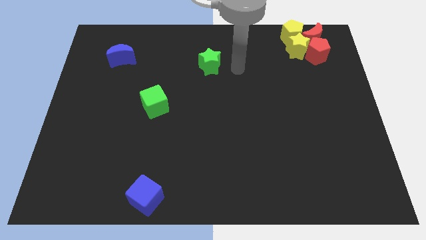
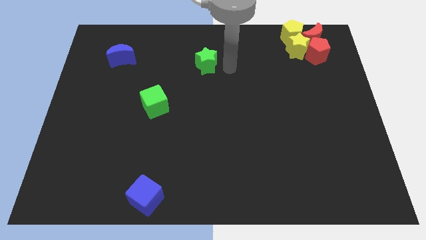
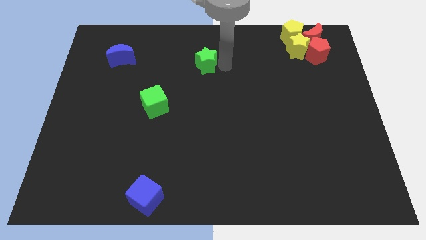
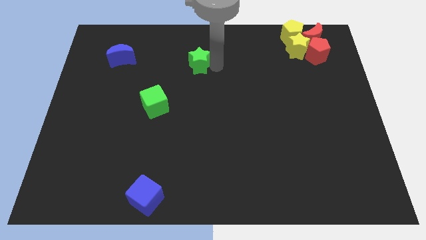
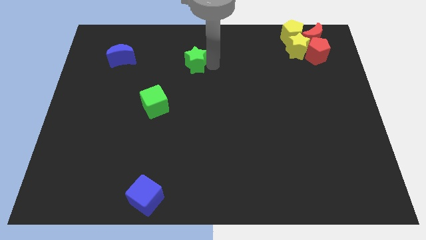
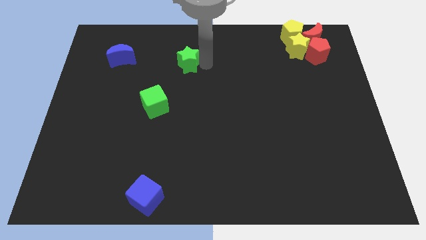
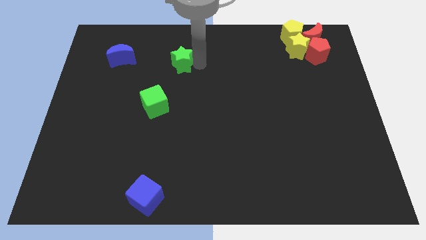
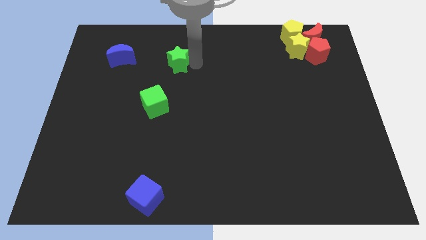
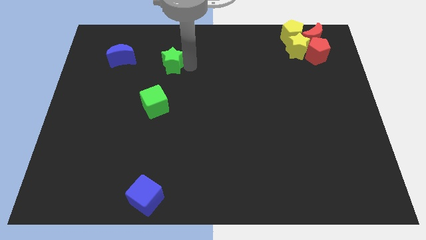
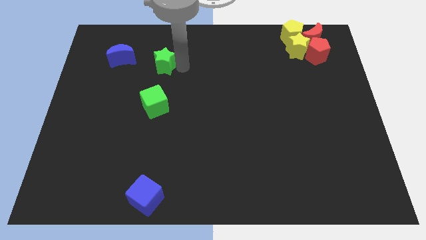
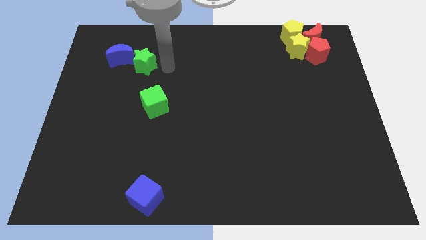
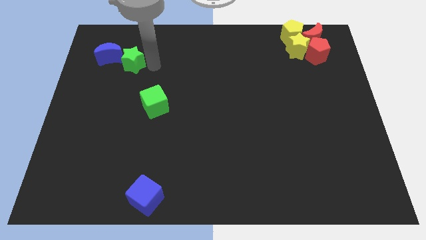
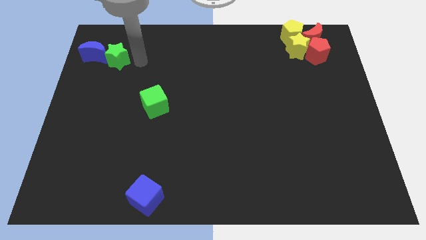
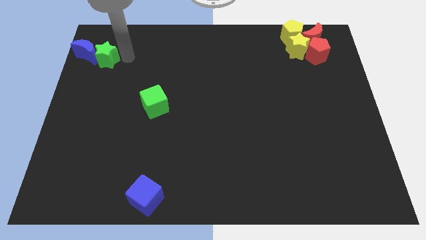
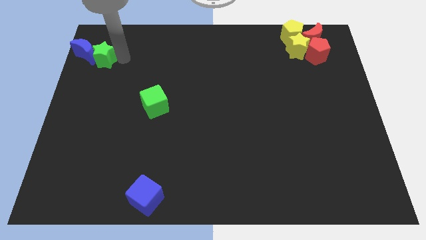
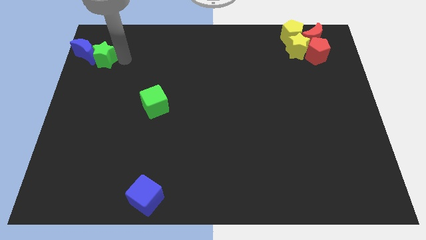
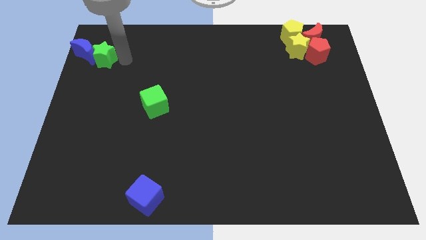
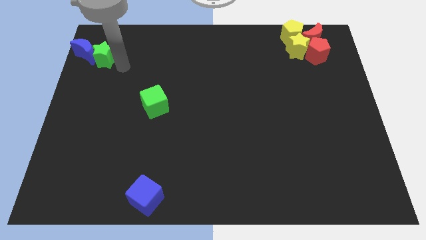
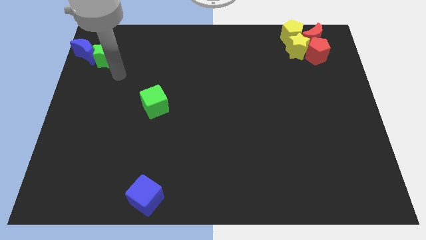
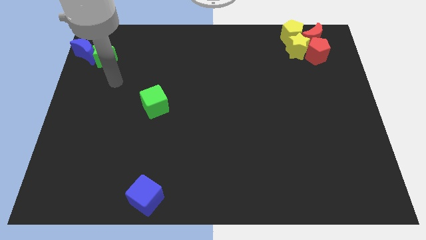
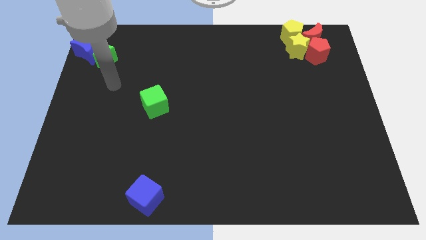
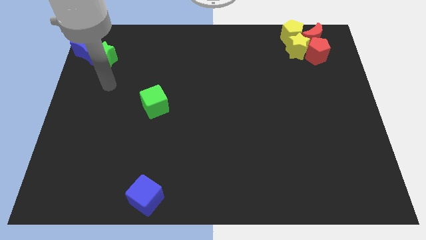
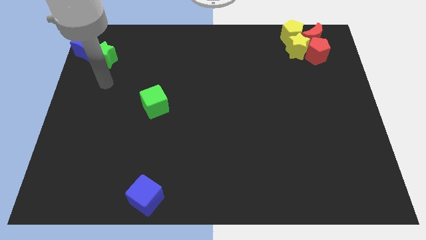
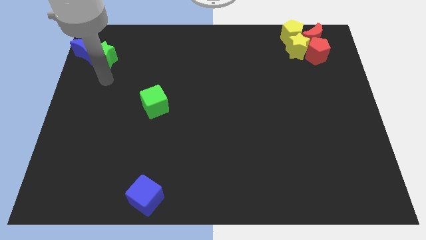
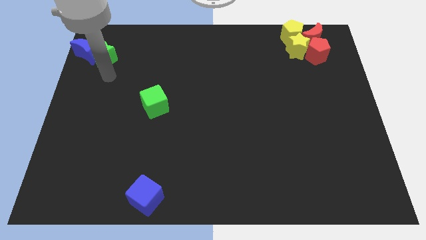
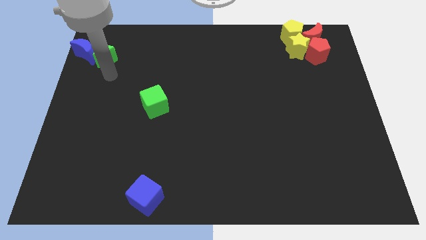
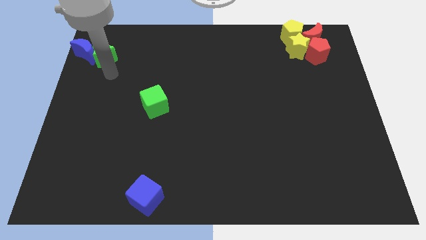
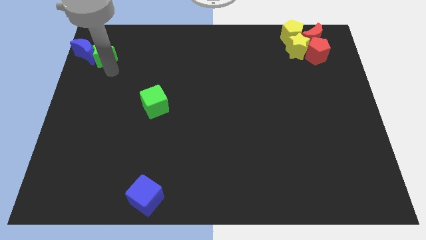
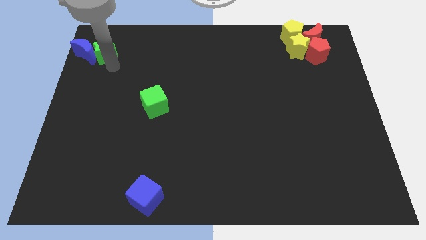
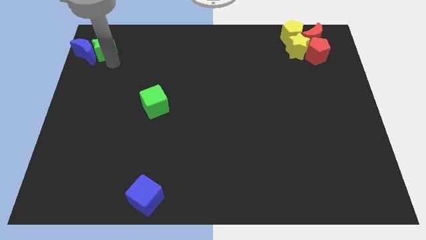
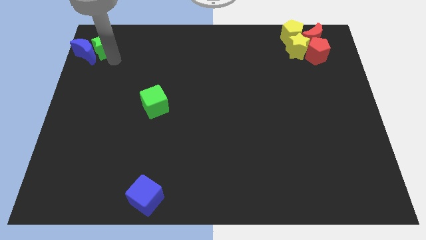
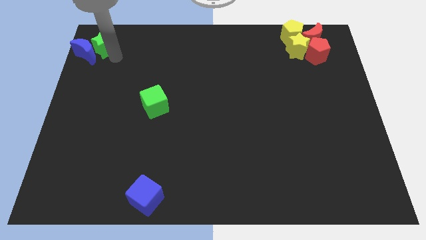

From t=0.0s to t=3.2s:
move green star towards the top left

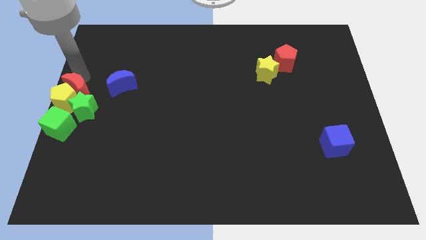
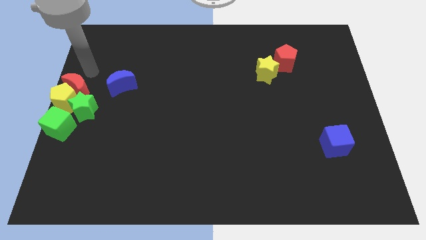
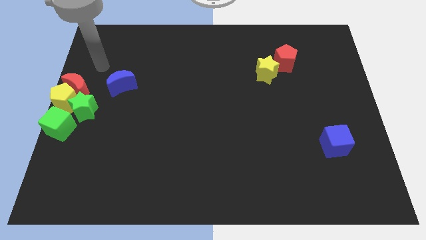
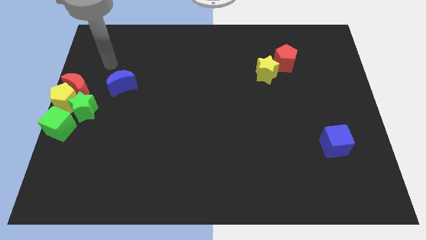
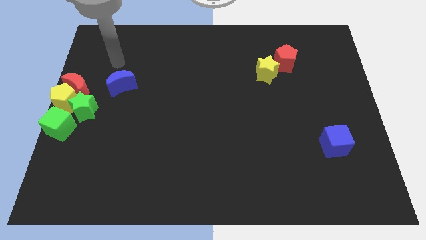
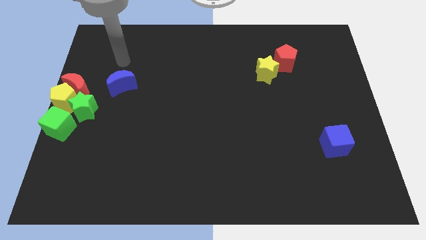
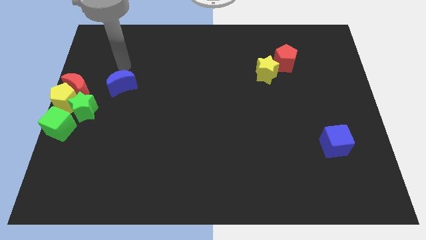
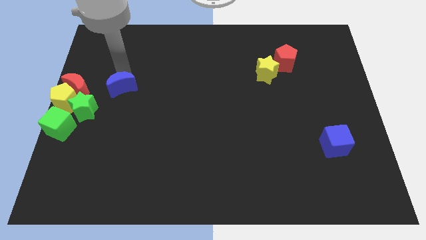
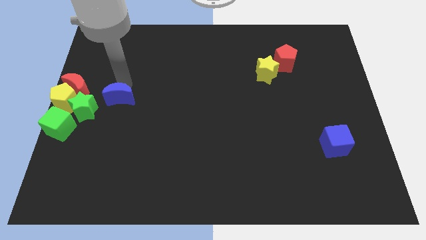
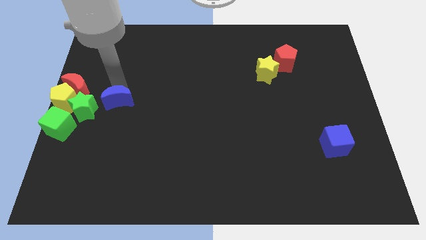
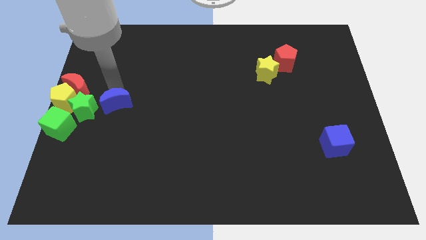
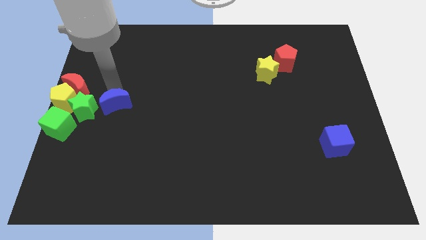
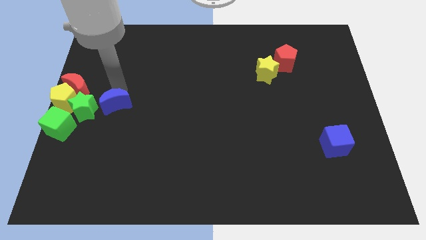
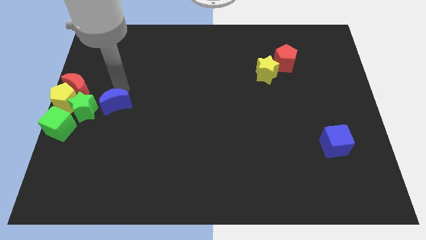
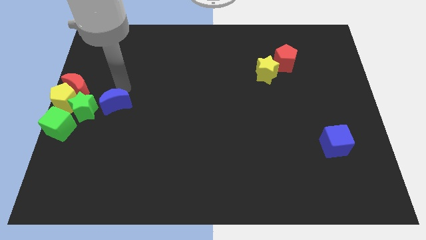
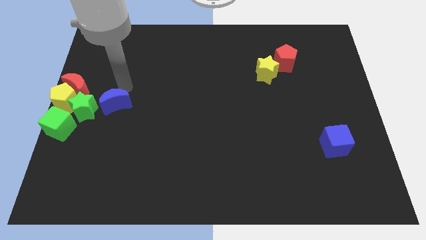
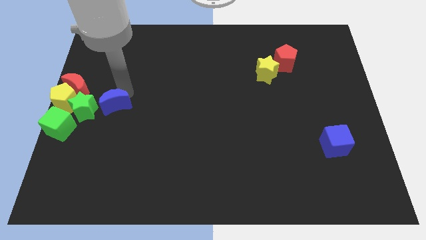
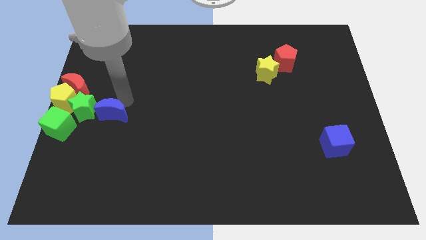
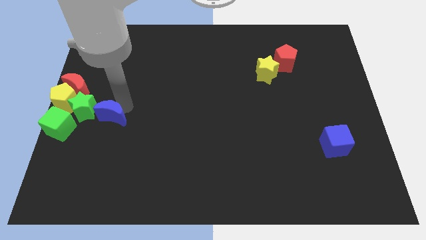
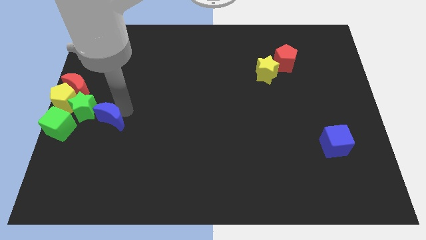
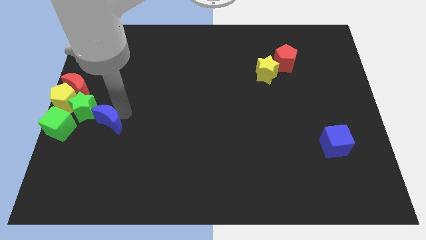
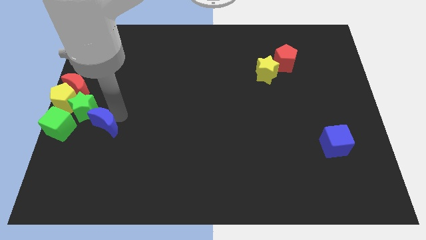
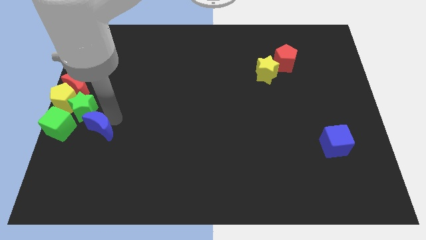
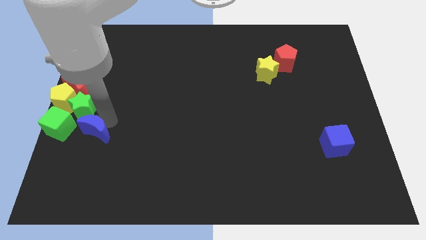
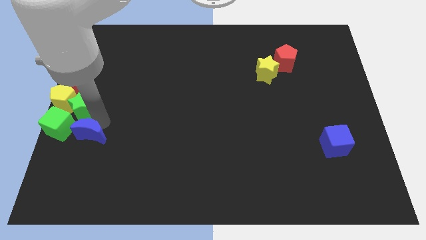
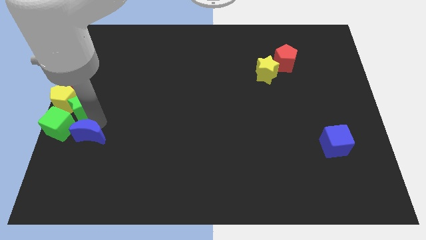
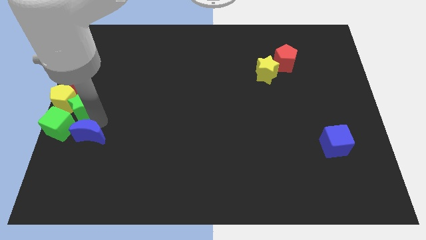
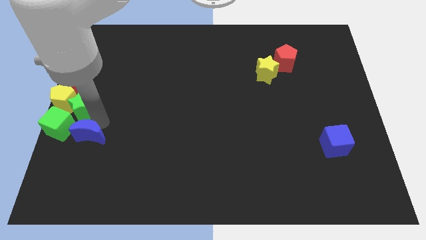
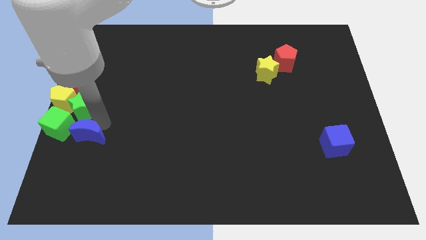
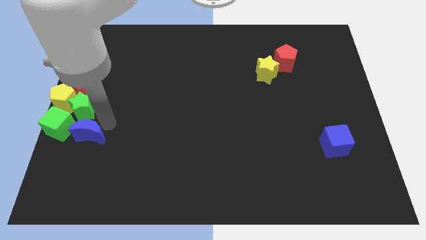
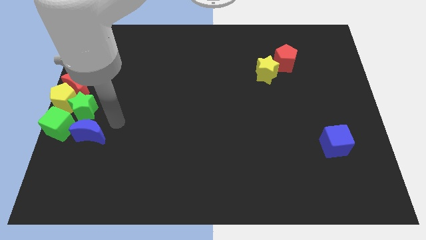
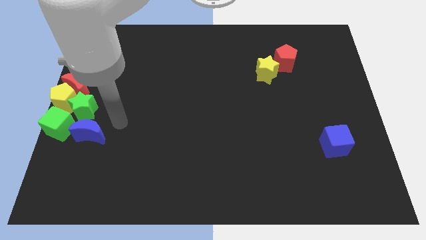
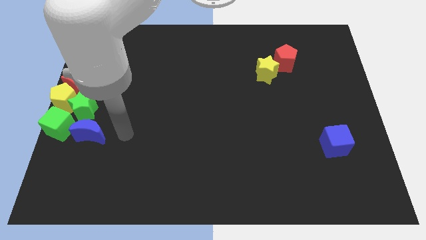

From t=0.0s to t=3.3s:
push the blue moon right to the green cube

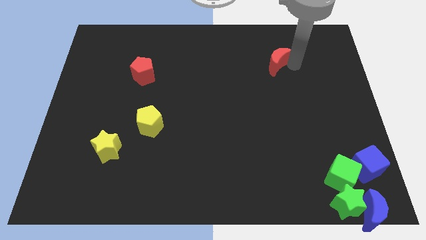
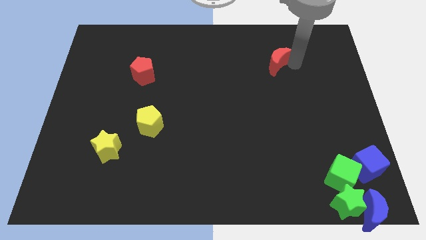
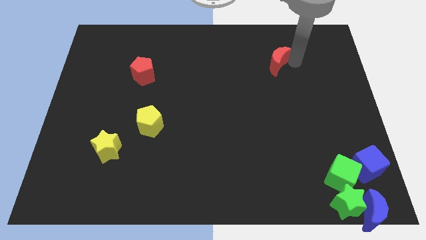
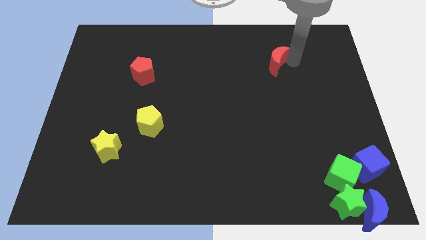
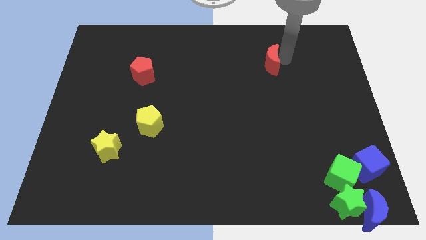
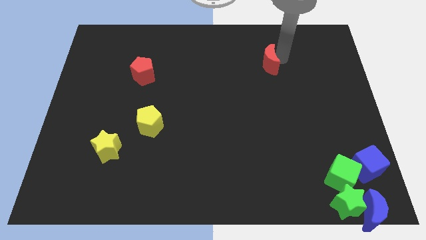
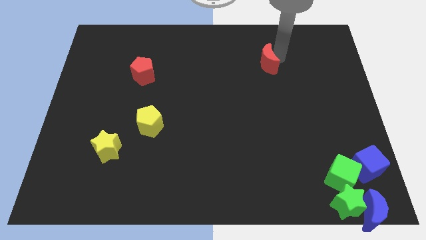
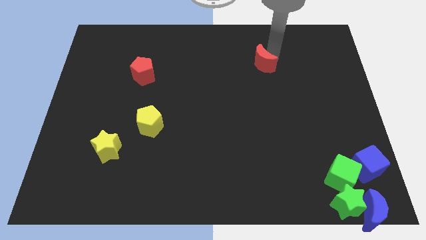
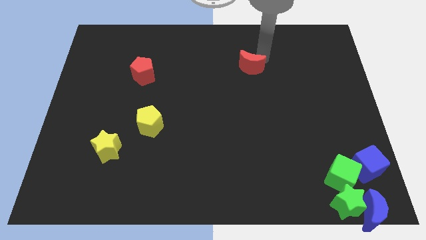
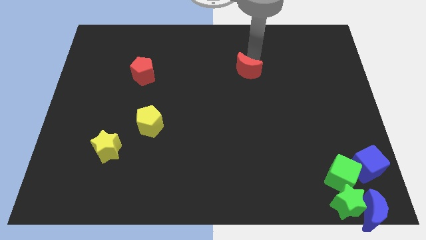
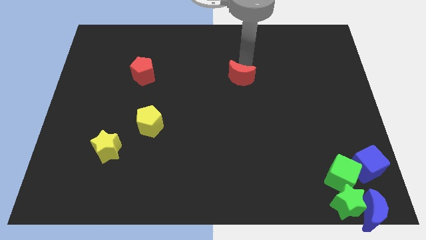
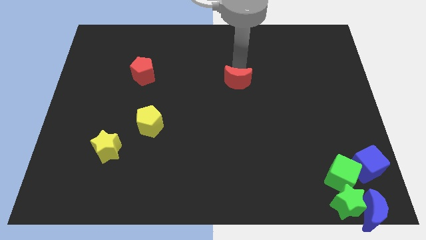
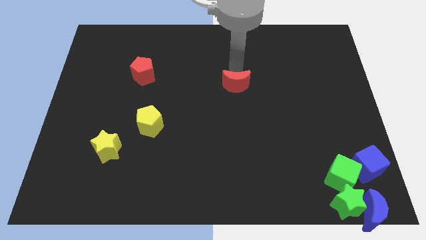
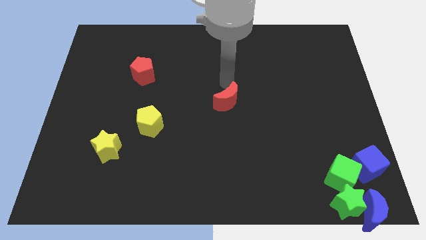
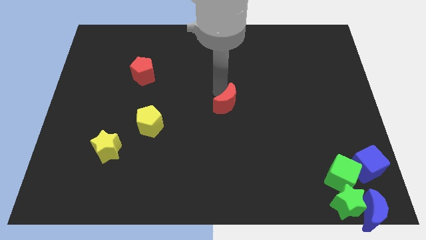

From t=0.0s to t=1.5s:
move the red moon to the center of the board

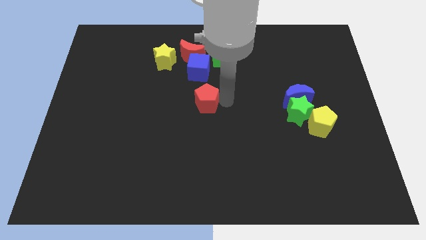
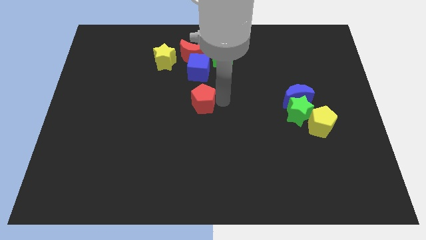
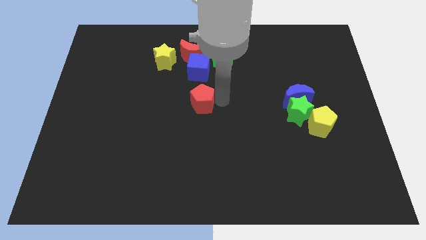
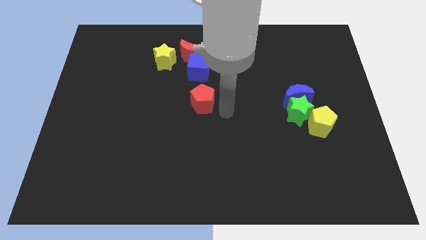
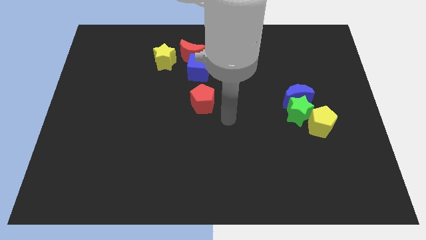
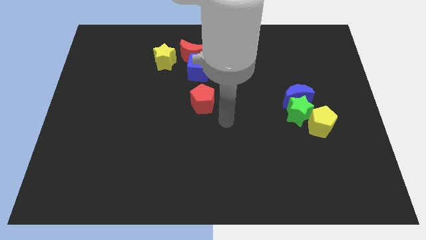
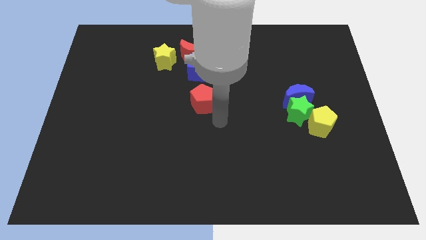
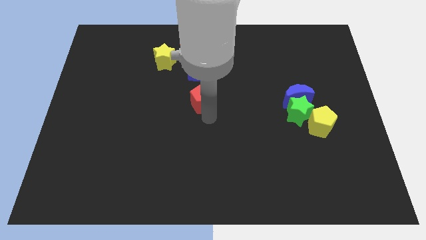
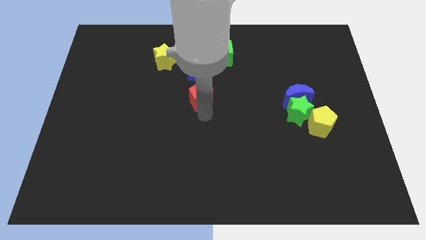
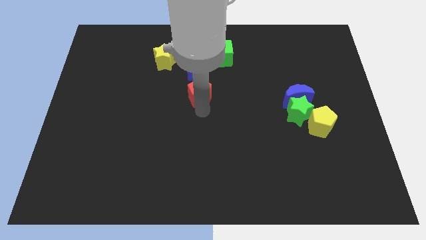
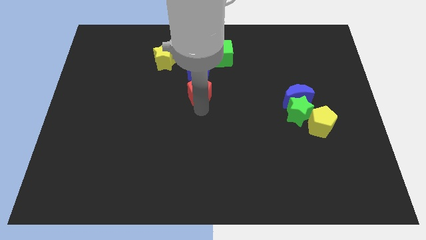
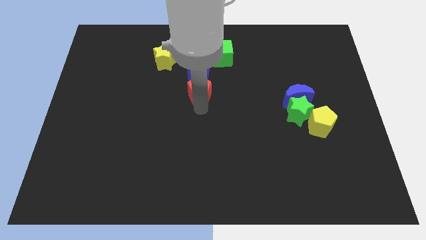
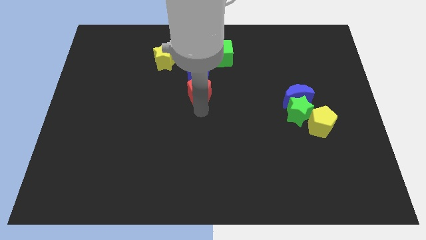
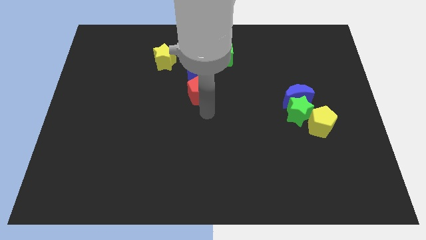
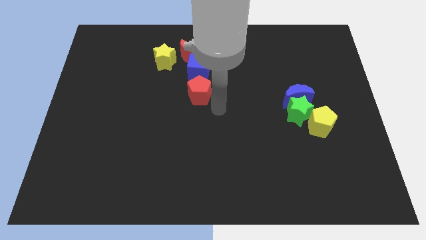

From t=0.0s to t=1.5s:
move the red pentagon to the bottom of the blue cube
